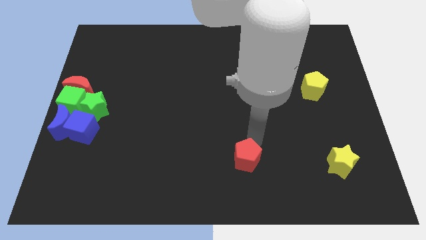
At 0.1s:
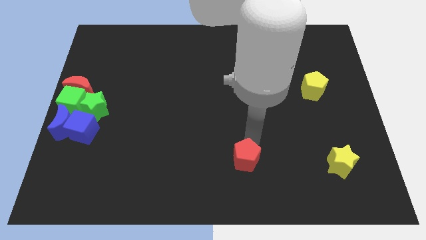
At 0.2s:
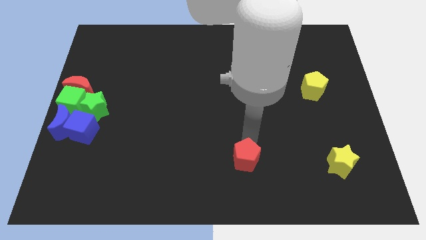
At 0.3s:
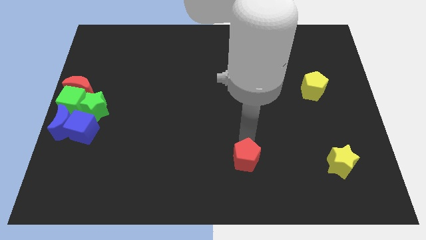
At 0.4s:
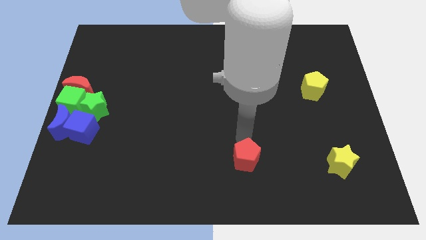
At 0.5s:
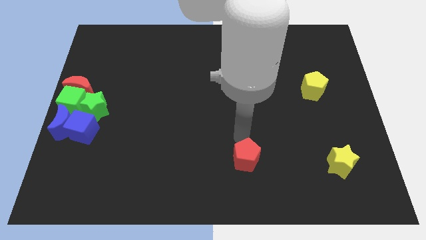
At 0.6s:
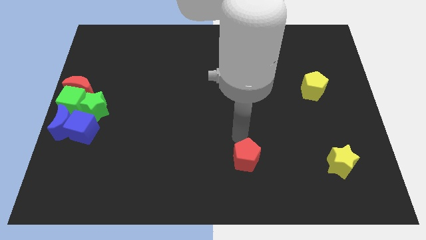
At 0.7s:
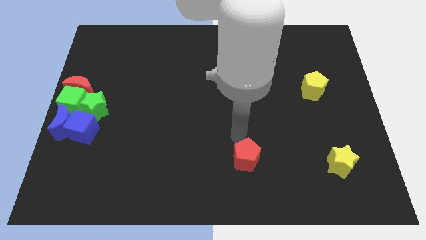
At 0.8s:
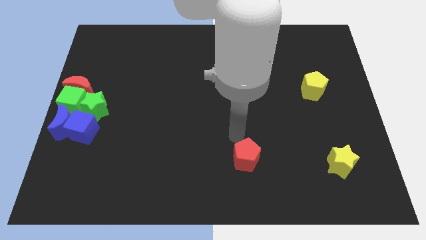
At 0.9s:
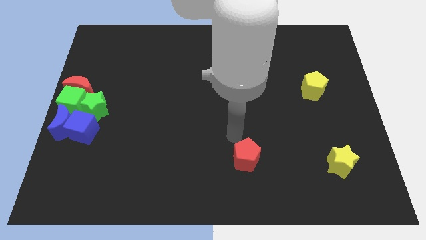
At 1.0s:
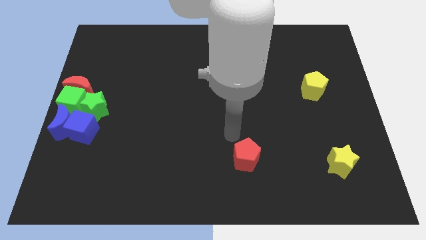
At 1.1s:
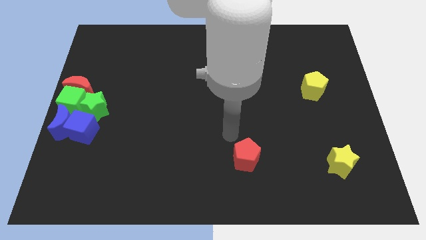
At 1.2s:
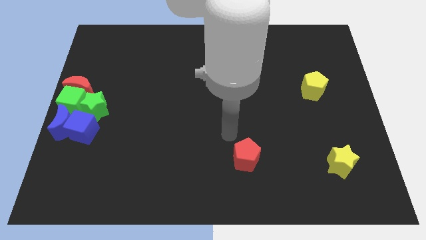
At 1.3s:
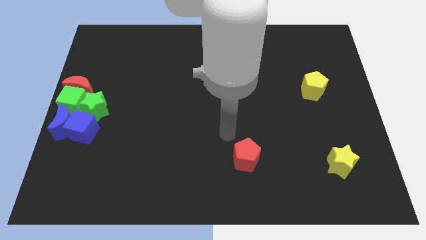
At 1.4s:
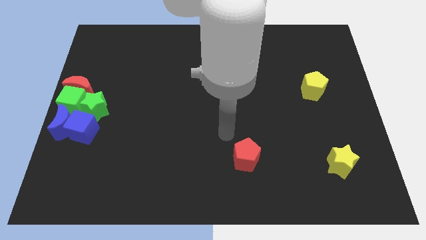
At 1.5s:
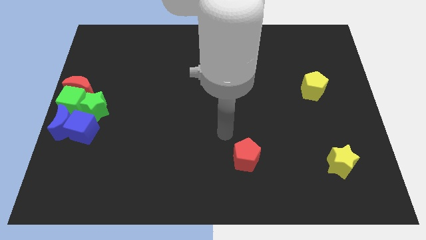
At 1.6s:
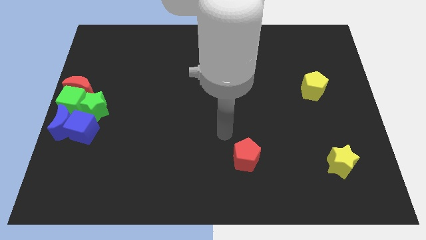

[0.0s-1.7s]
place your arm at the top left of the red pentagon

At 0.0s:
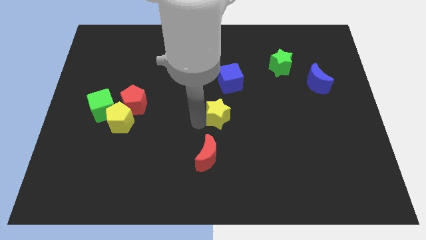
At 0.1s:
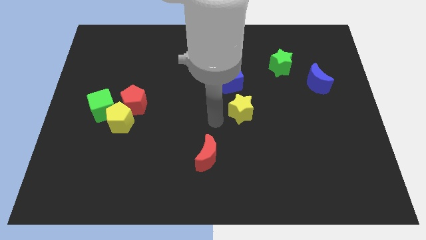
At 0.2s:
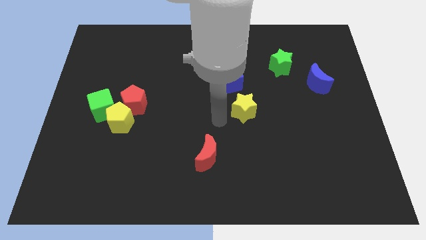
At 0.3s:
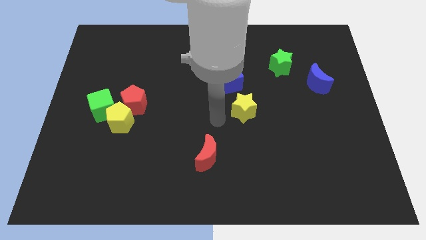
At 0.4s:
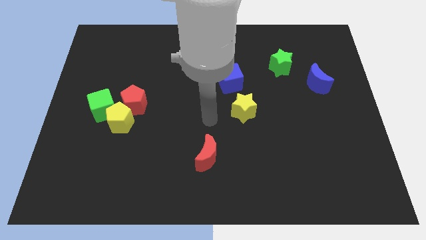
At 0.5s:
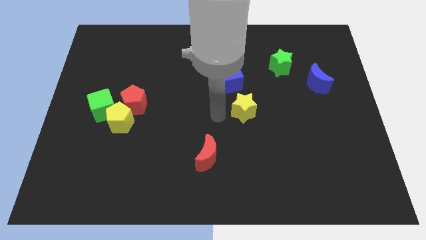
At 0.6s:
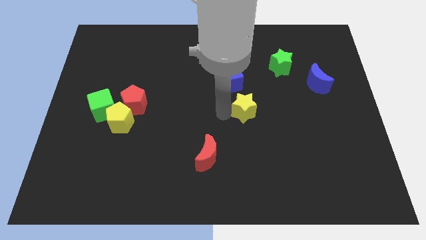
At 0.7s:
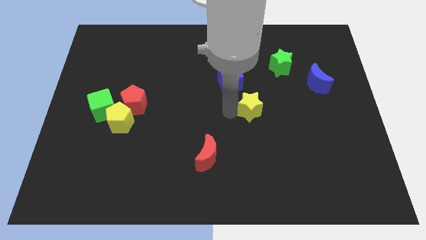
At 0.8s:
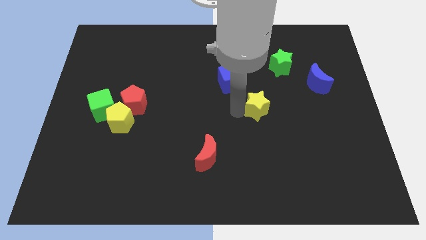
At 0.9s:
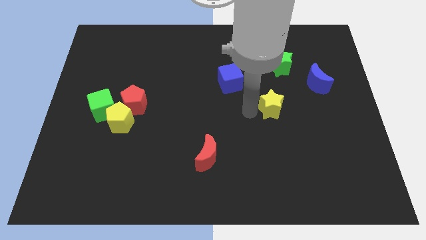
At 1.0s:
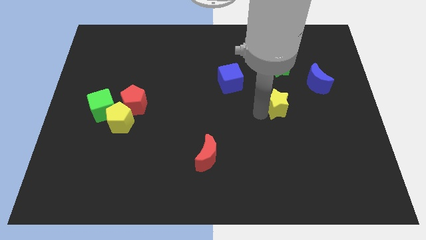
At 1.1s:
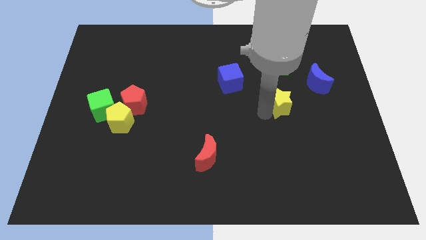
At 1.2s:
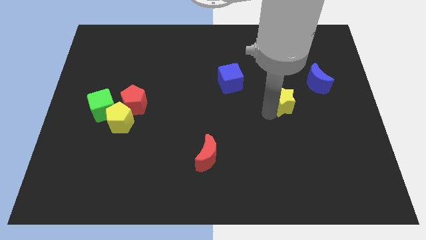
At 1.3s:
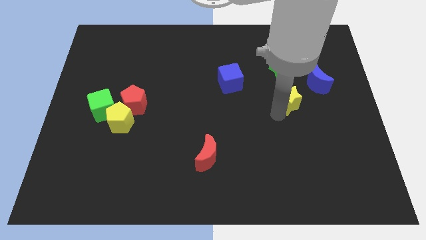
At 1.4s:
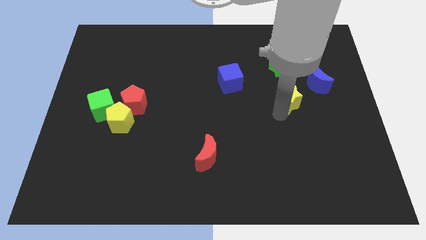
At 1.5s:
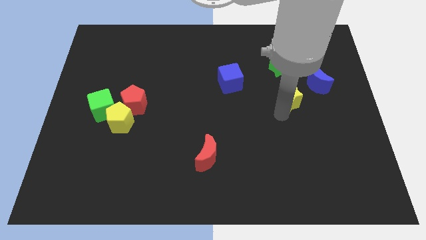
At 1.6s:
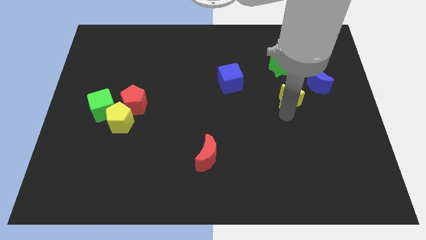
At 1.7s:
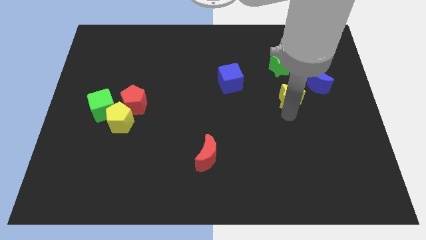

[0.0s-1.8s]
move the yellow star below to the green star

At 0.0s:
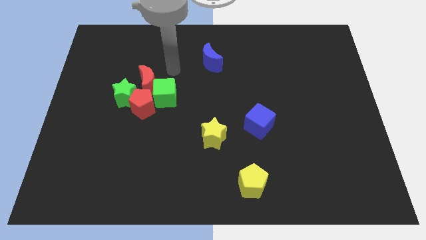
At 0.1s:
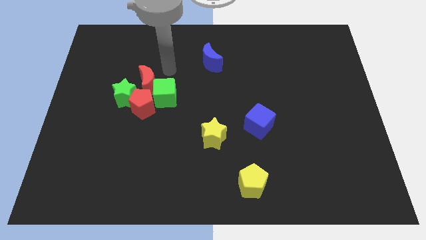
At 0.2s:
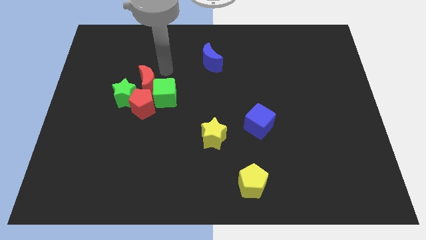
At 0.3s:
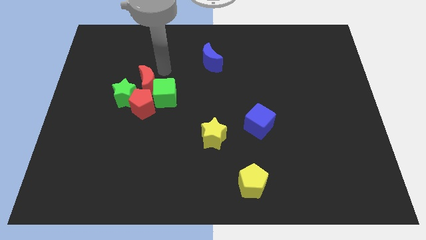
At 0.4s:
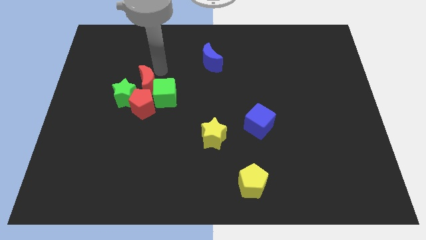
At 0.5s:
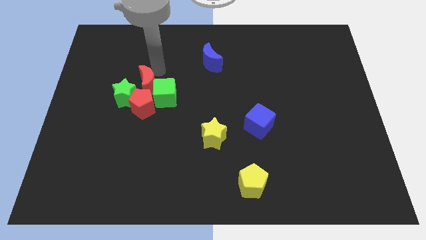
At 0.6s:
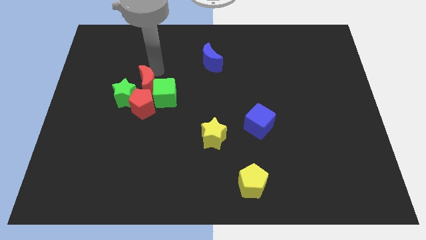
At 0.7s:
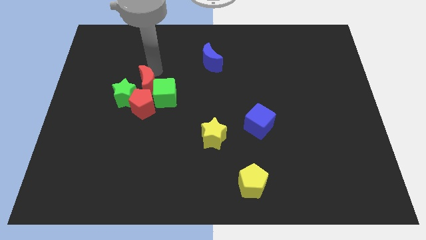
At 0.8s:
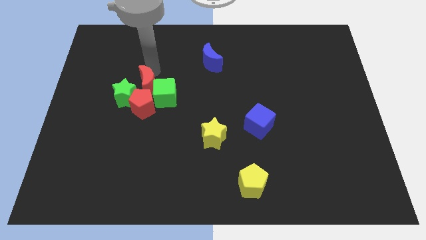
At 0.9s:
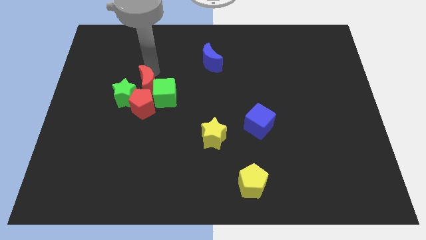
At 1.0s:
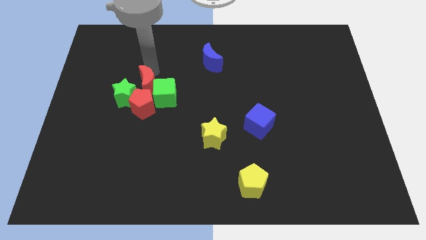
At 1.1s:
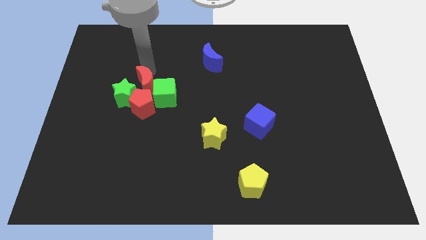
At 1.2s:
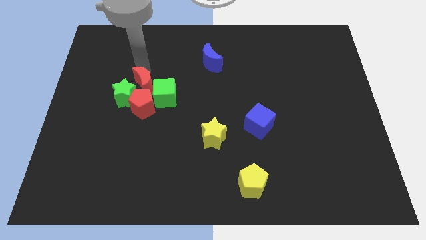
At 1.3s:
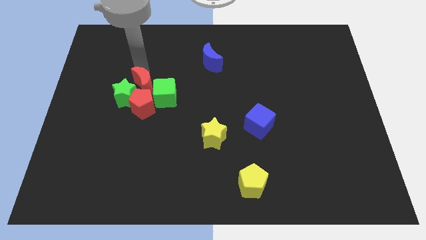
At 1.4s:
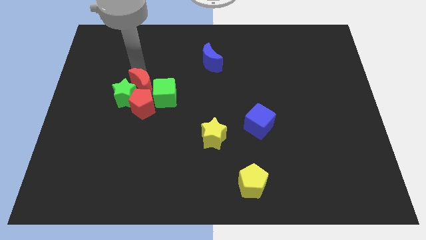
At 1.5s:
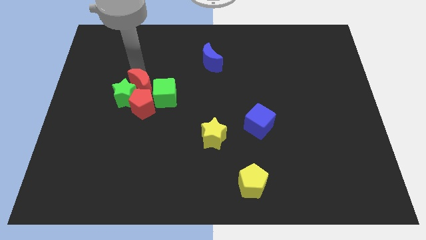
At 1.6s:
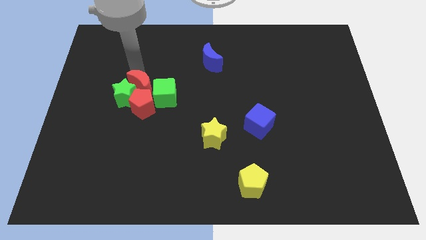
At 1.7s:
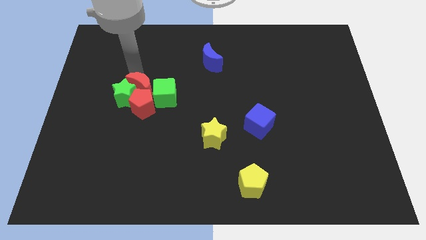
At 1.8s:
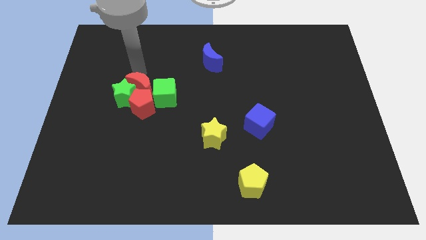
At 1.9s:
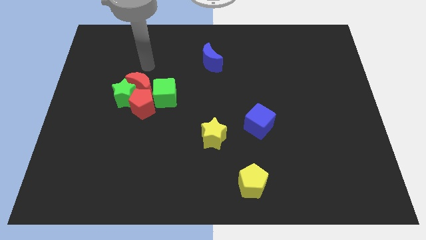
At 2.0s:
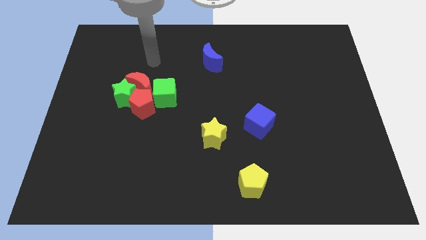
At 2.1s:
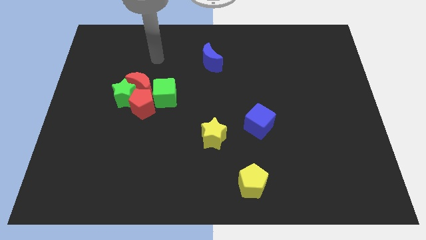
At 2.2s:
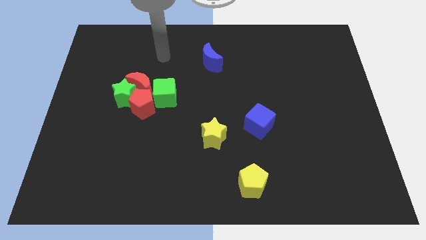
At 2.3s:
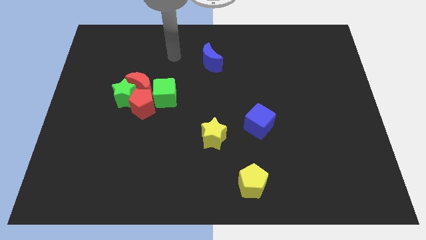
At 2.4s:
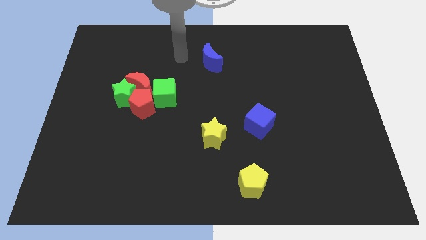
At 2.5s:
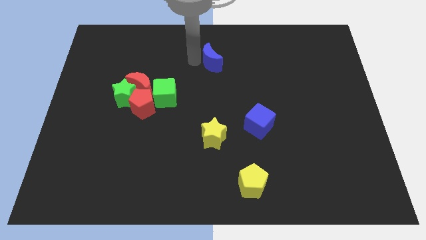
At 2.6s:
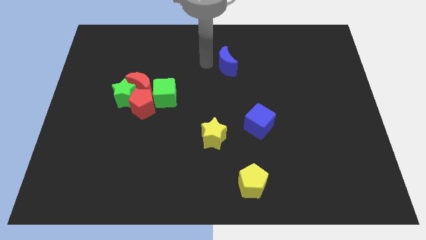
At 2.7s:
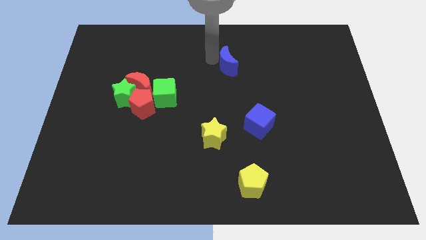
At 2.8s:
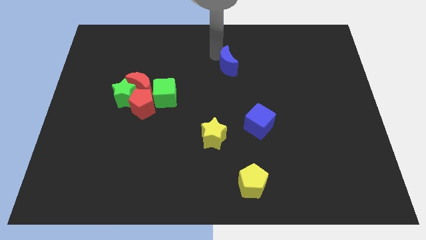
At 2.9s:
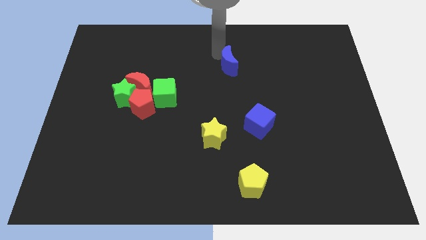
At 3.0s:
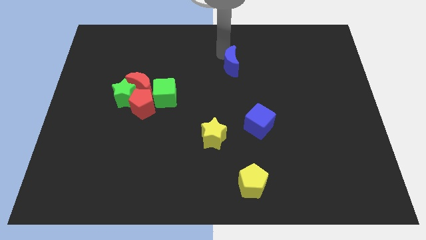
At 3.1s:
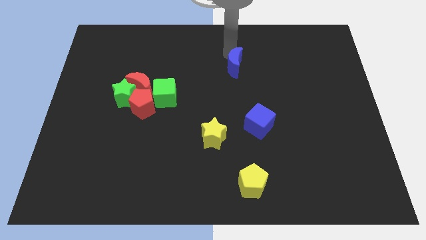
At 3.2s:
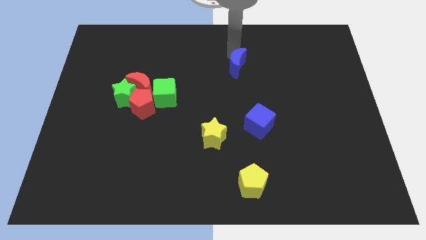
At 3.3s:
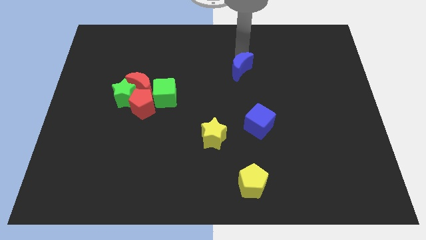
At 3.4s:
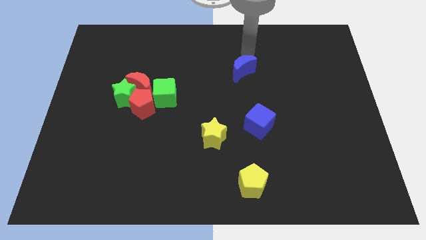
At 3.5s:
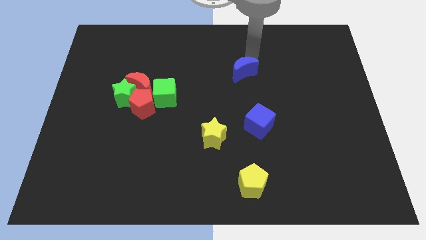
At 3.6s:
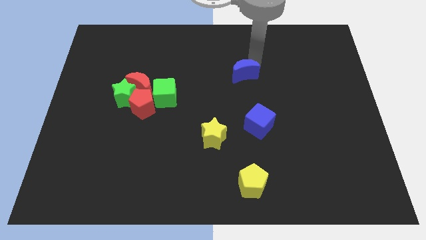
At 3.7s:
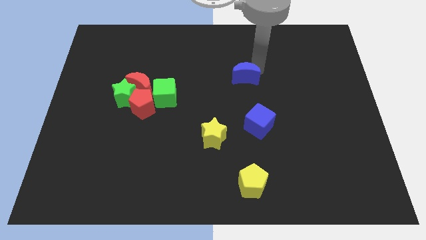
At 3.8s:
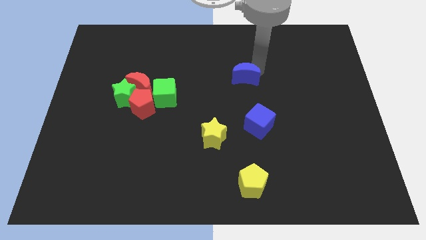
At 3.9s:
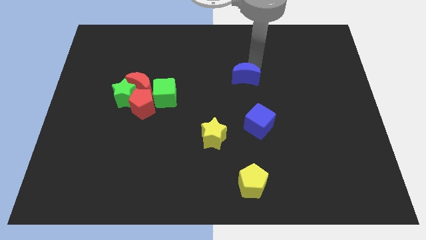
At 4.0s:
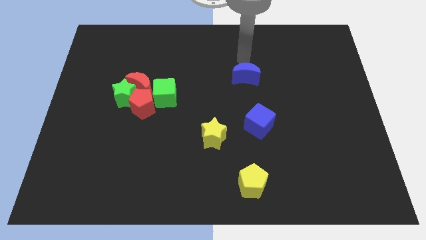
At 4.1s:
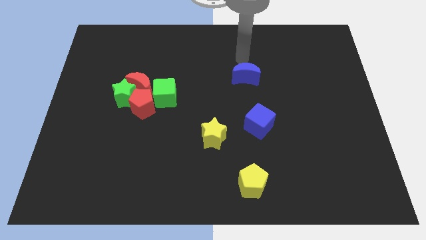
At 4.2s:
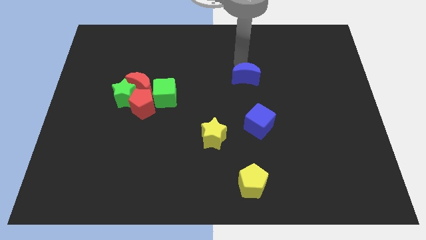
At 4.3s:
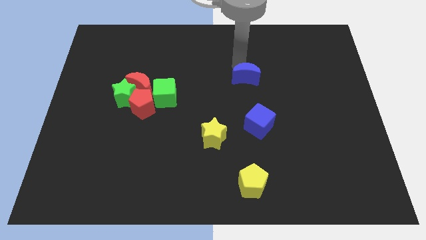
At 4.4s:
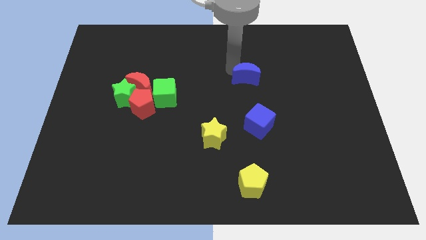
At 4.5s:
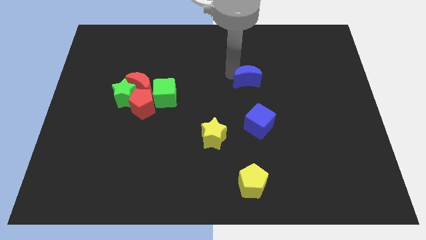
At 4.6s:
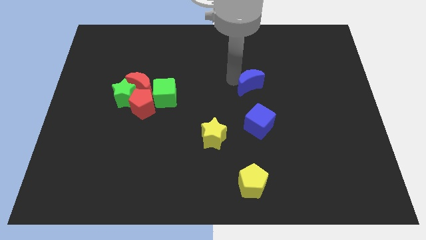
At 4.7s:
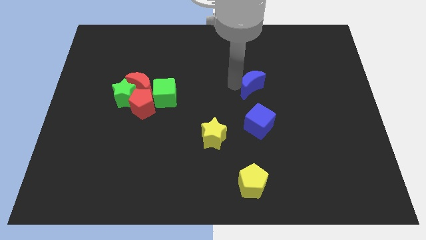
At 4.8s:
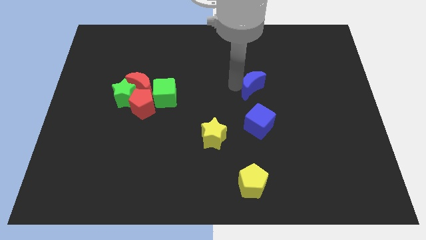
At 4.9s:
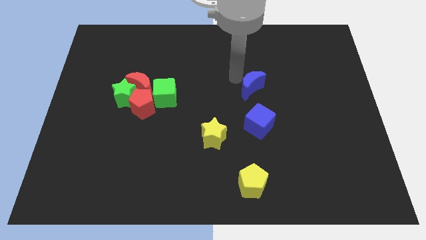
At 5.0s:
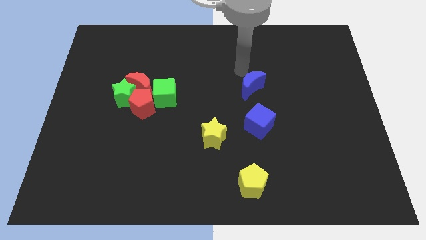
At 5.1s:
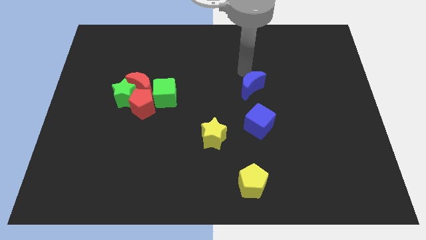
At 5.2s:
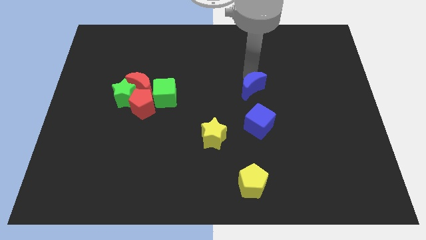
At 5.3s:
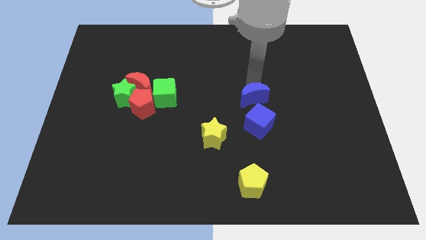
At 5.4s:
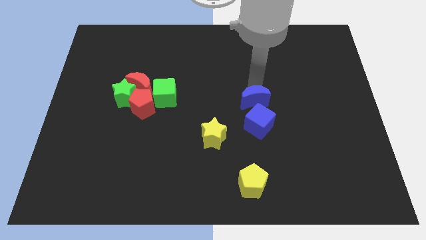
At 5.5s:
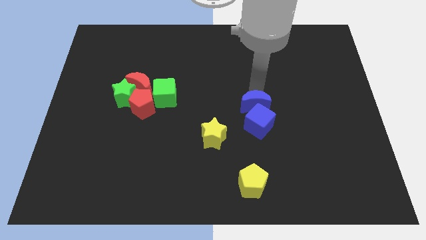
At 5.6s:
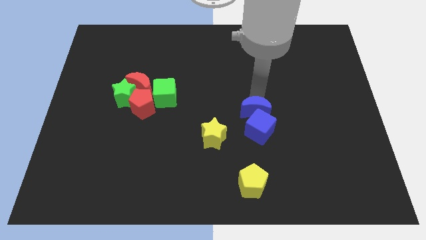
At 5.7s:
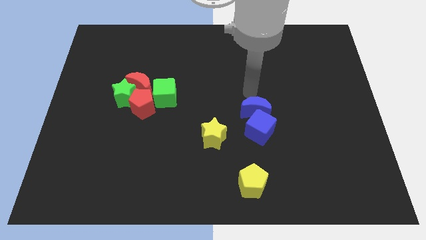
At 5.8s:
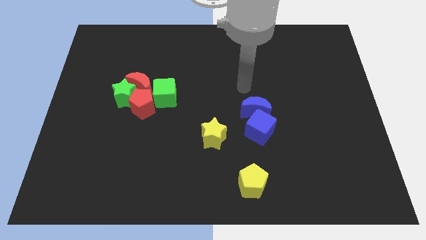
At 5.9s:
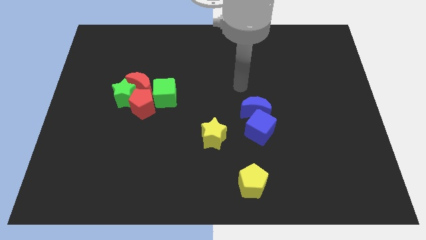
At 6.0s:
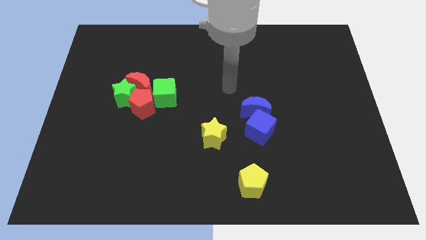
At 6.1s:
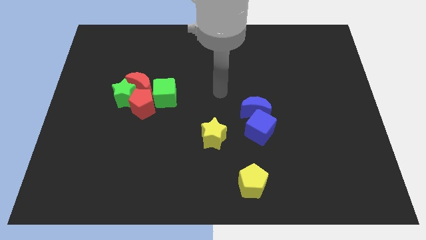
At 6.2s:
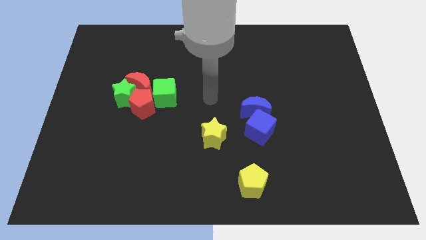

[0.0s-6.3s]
move the blue crescent into the blue cube
